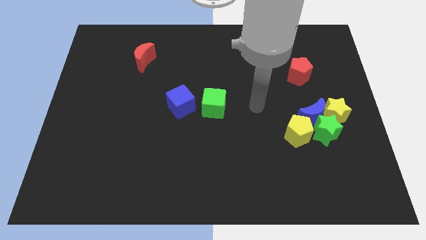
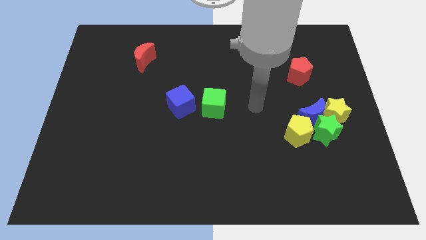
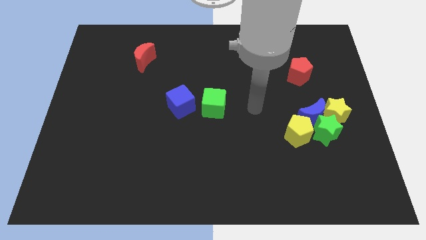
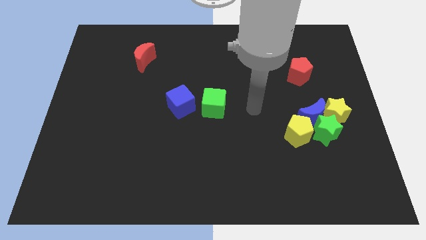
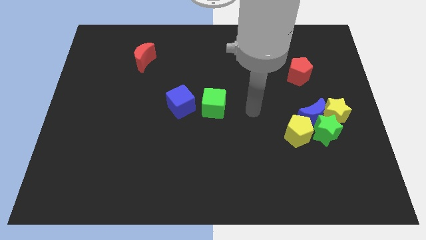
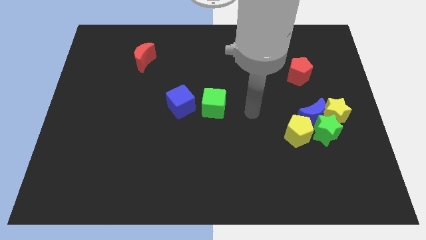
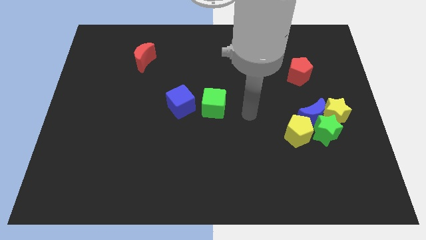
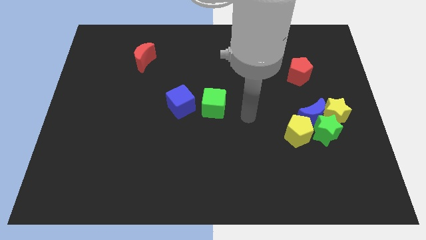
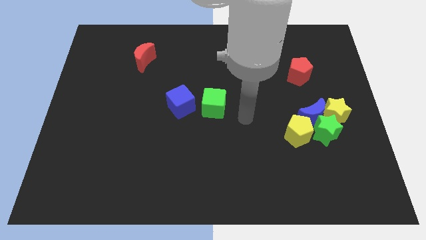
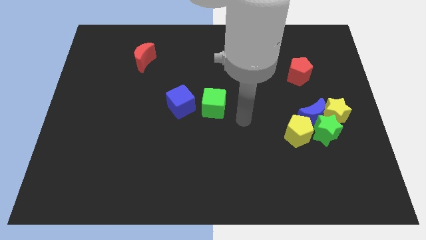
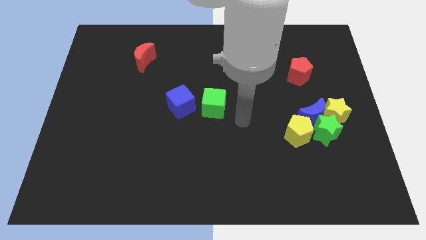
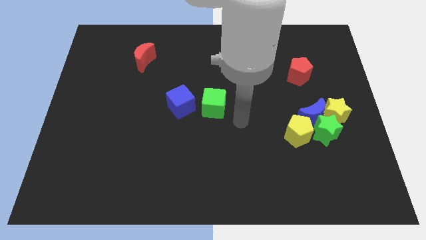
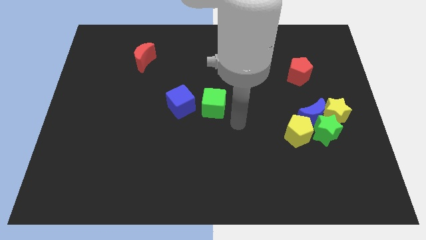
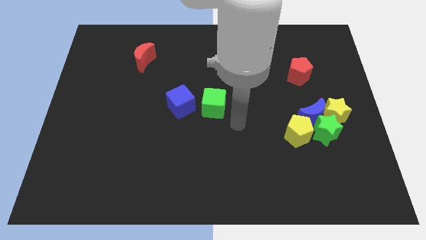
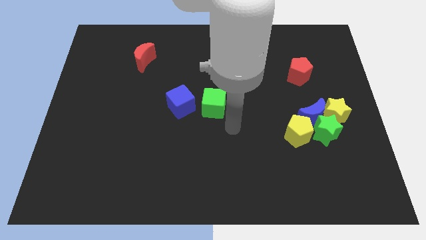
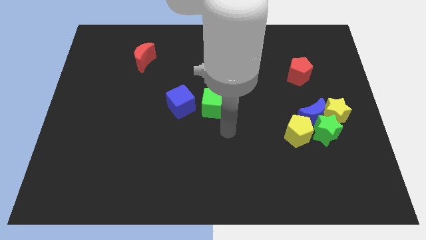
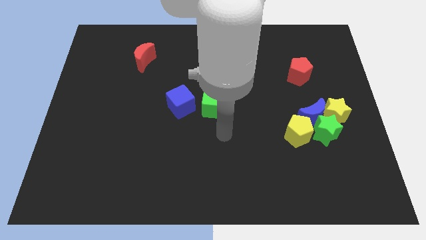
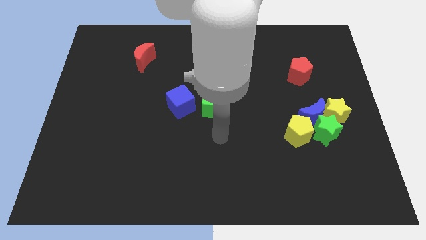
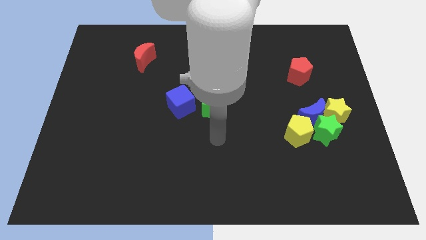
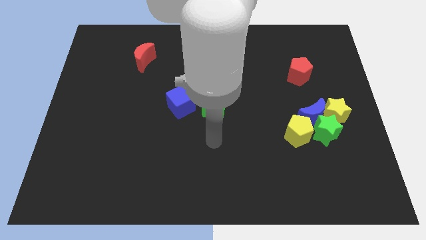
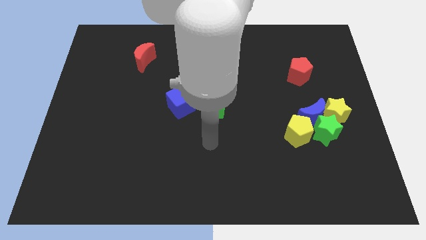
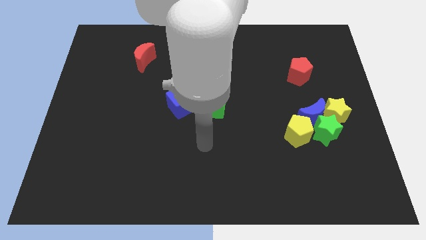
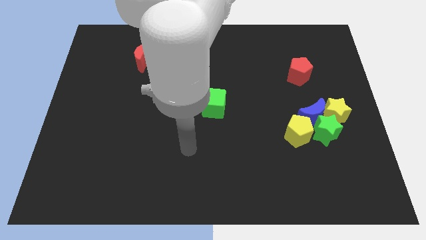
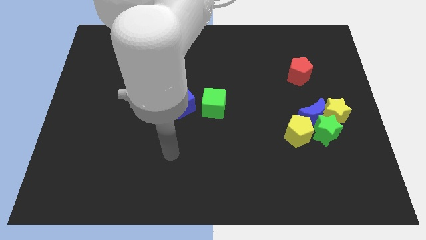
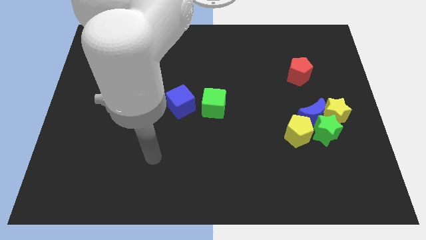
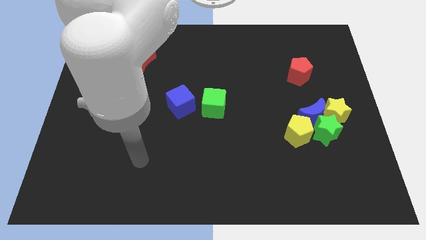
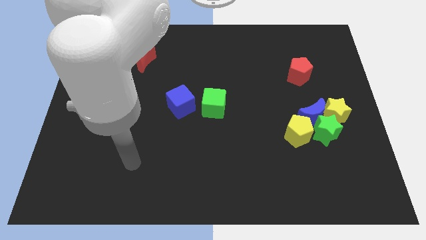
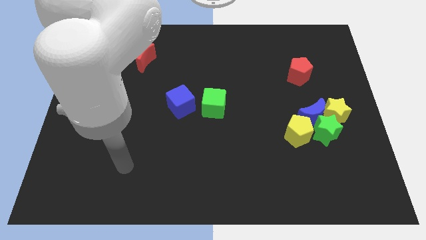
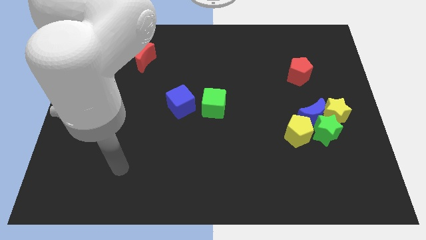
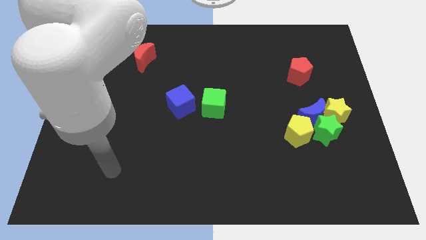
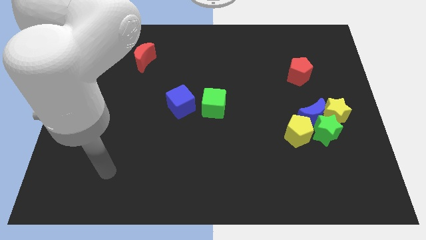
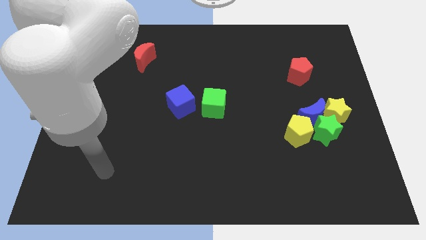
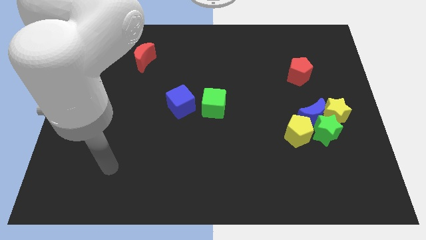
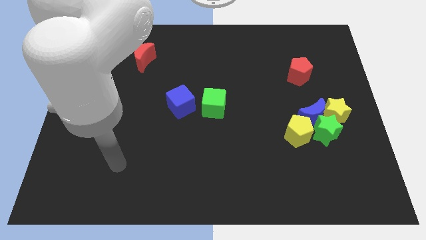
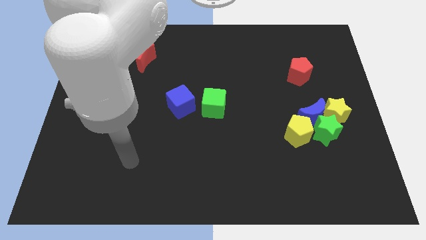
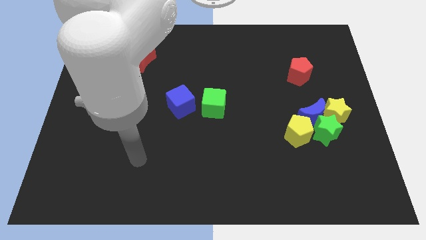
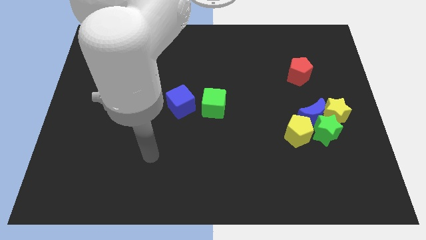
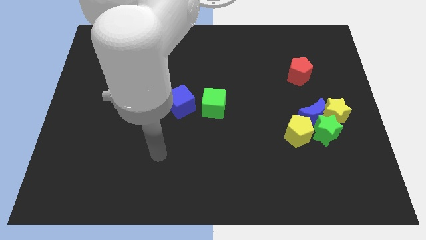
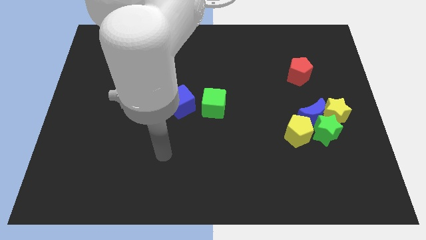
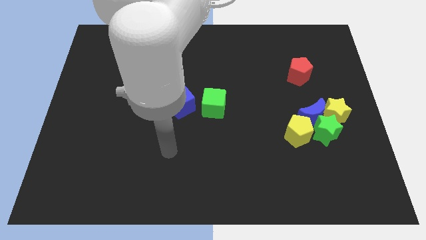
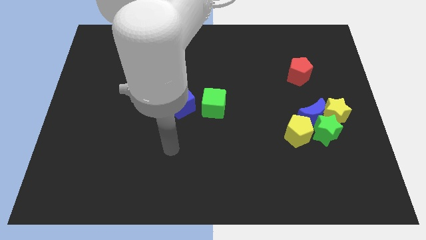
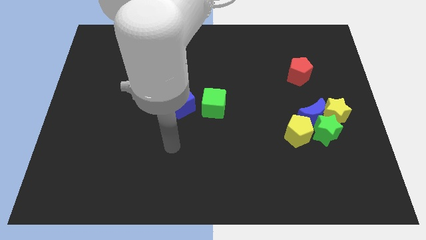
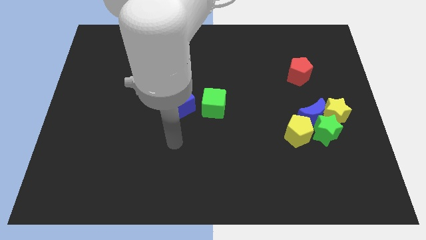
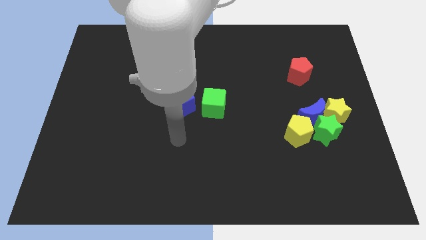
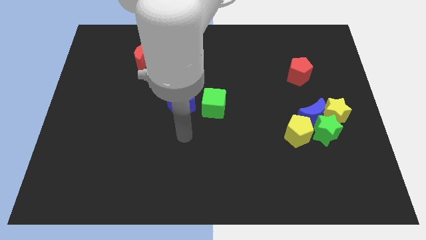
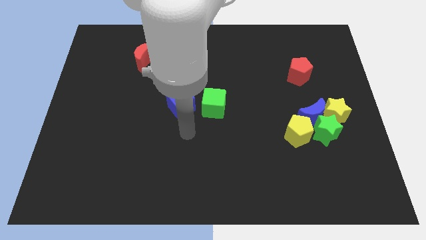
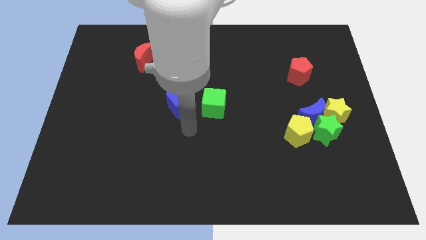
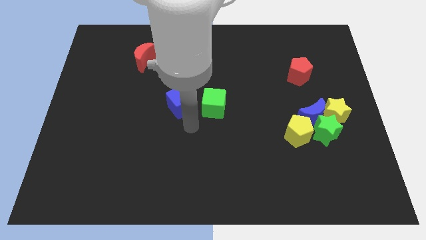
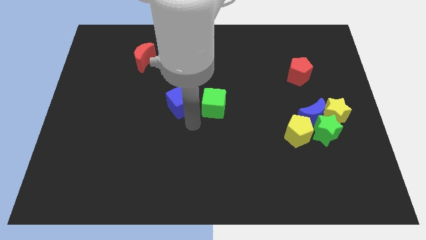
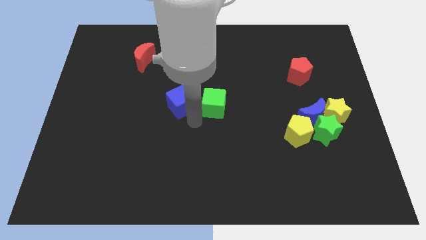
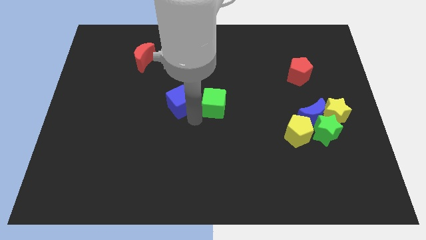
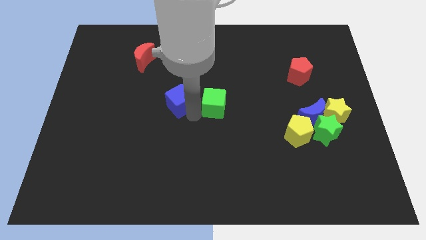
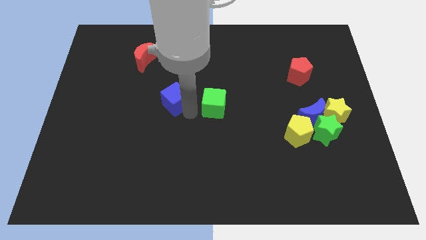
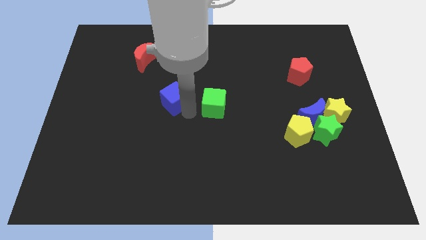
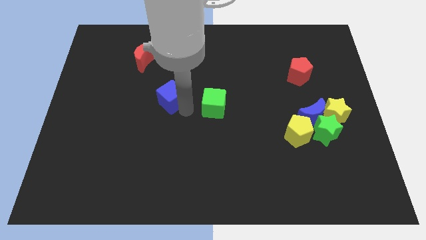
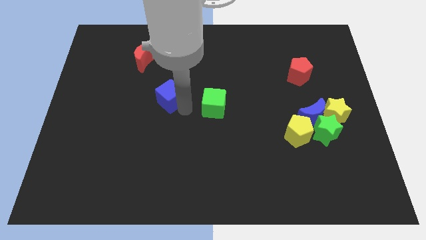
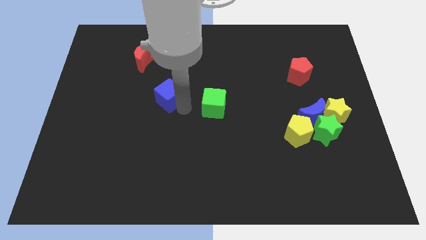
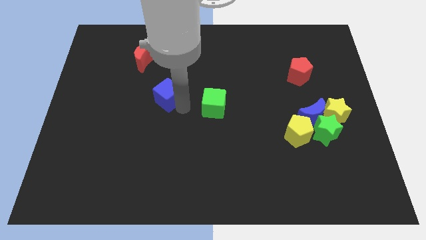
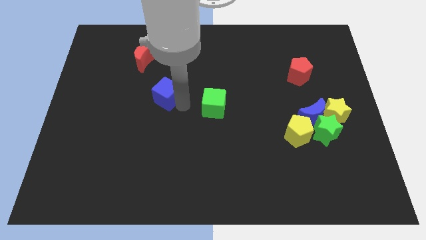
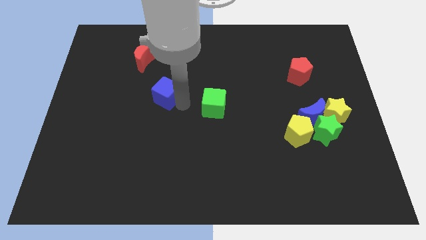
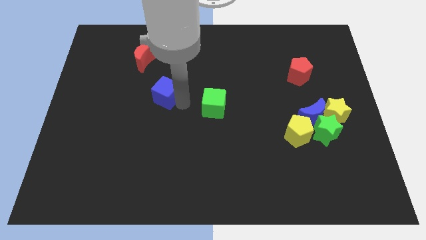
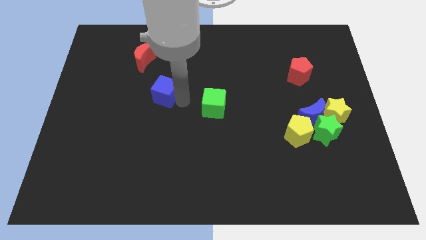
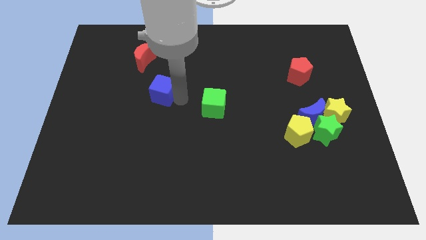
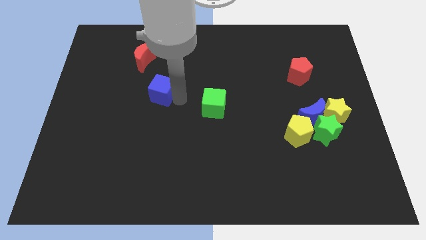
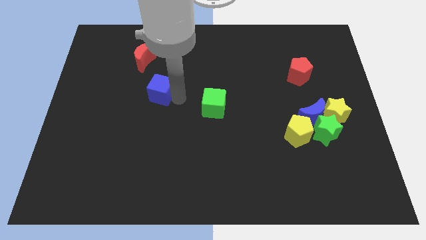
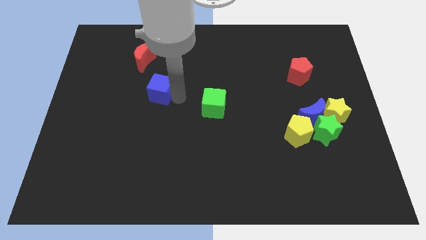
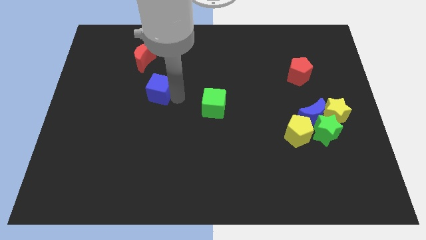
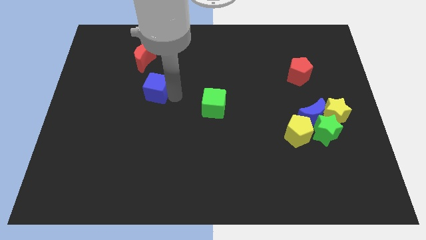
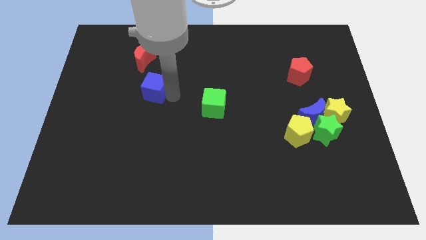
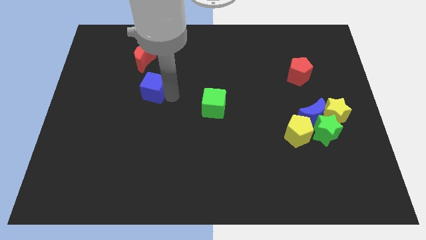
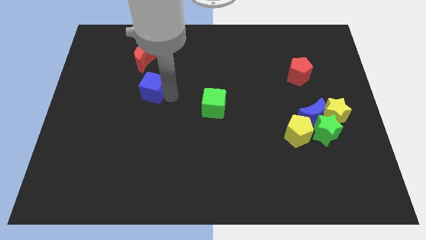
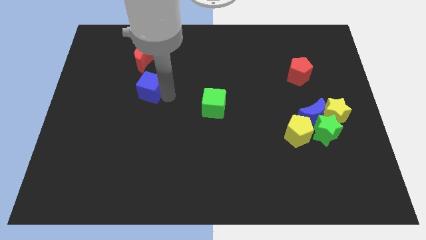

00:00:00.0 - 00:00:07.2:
place the blue cube below the red moon

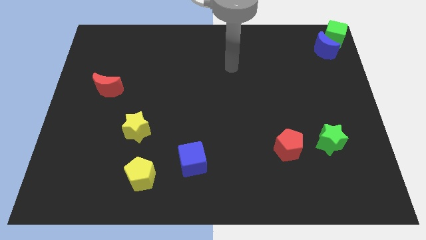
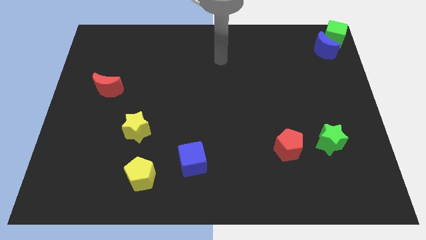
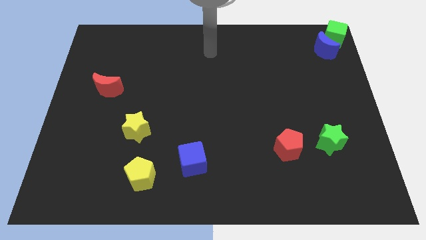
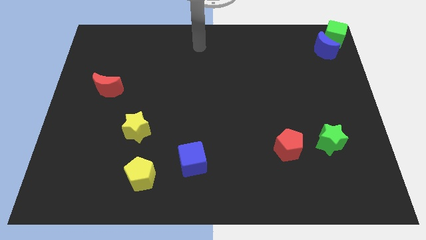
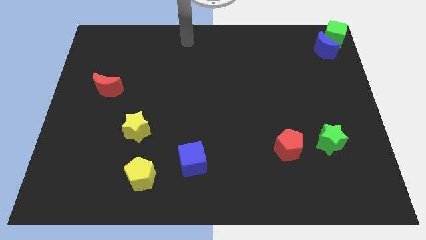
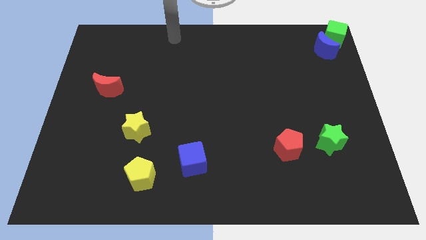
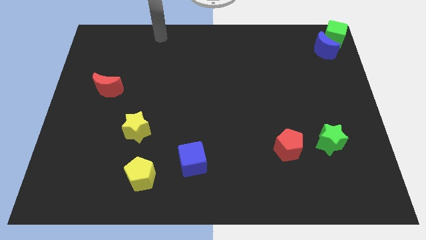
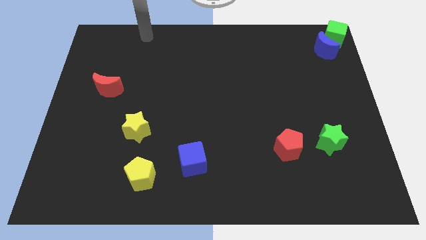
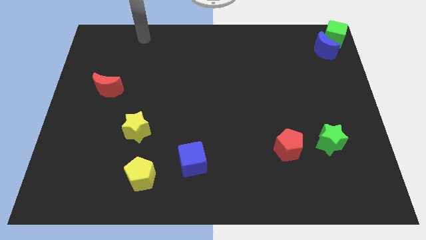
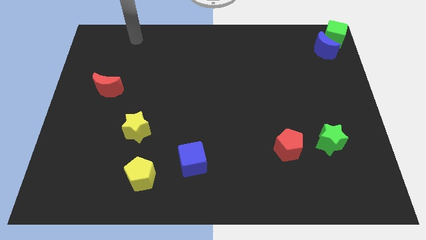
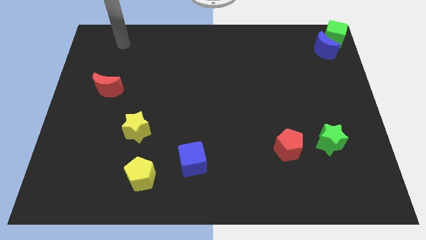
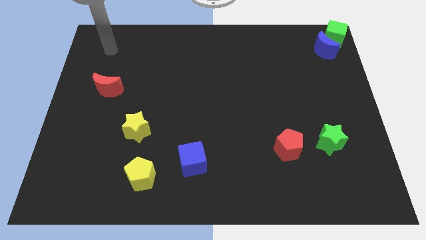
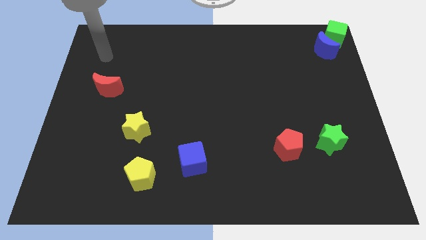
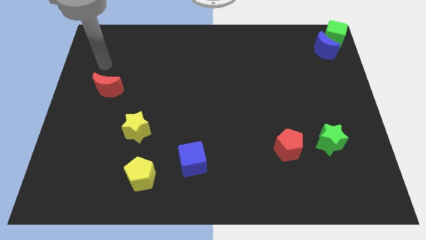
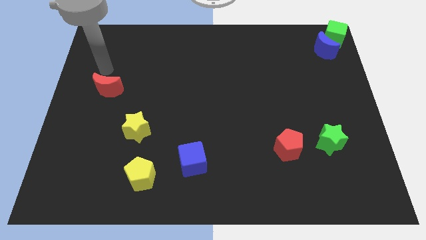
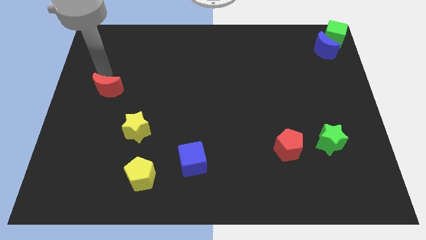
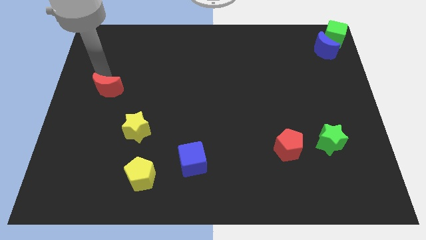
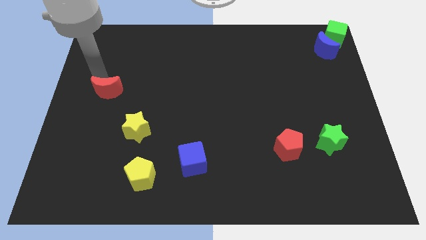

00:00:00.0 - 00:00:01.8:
move the red moon slightly down
